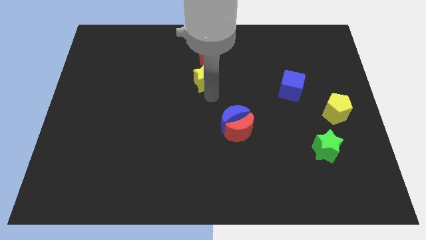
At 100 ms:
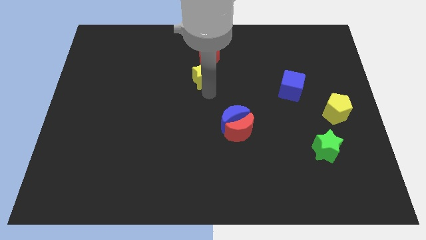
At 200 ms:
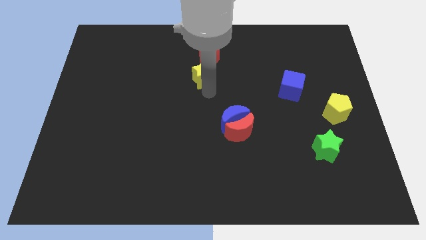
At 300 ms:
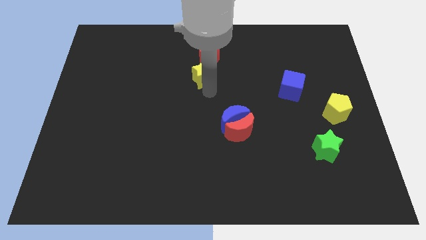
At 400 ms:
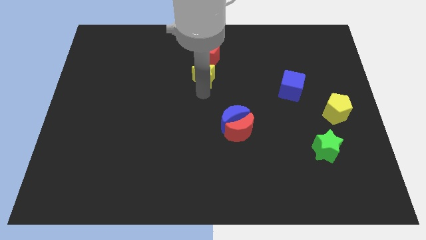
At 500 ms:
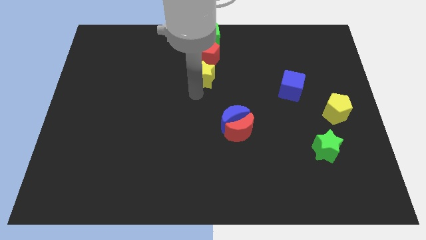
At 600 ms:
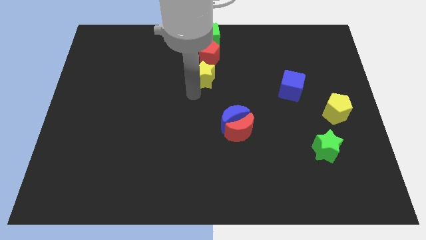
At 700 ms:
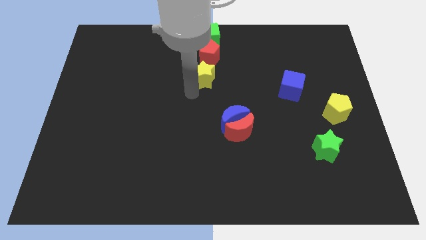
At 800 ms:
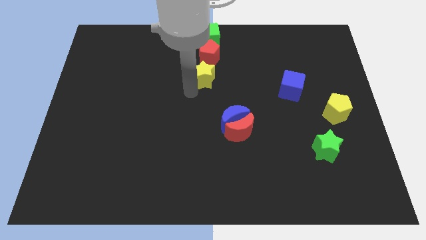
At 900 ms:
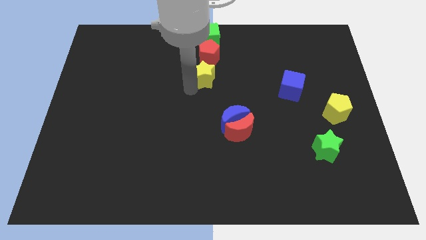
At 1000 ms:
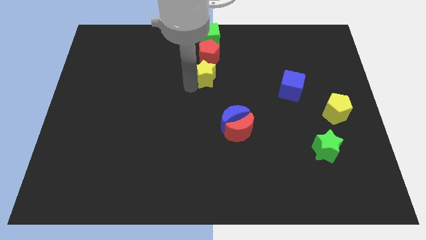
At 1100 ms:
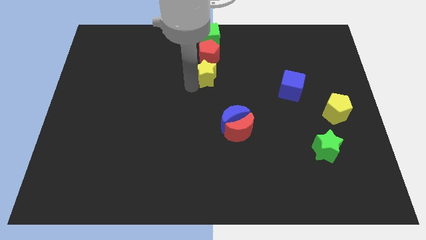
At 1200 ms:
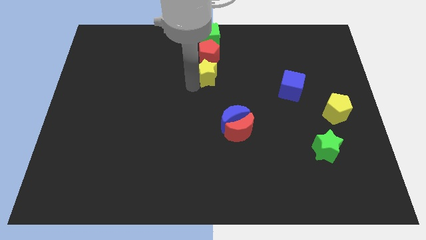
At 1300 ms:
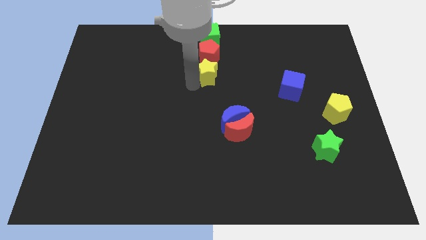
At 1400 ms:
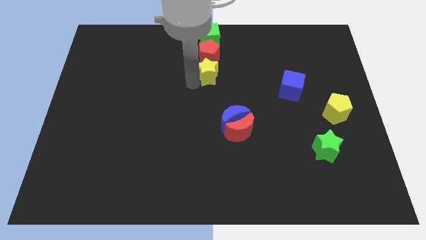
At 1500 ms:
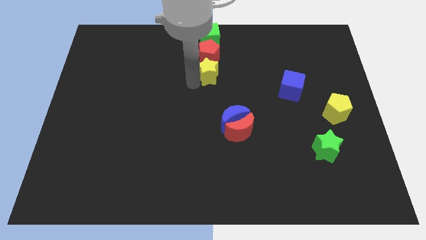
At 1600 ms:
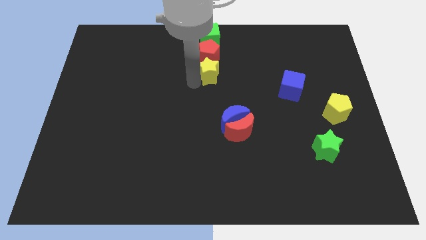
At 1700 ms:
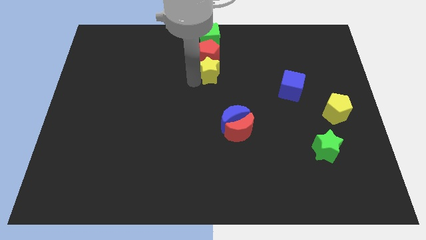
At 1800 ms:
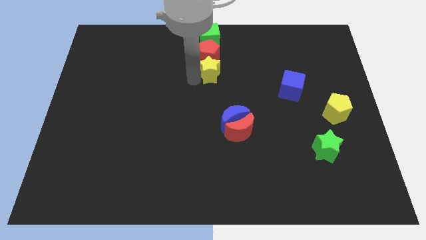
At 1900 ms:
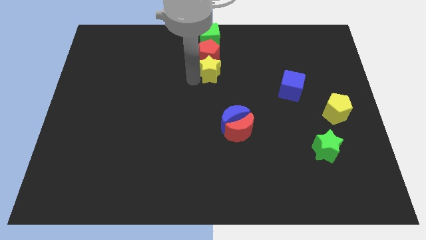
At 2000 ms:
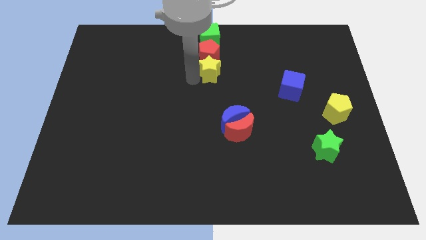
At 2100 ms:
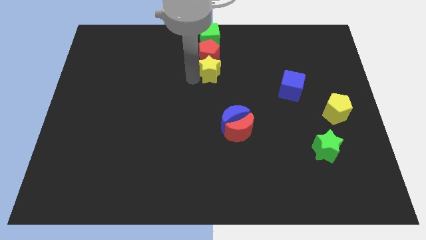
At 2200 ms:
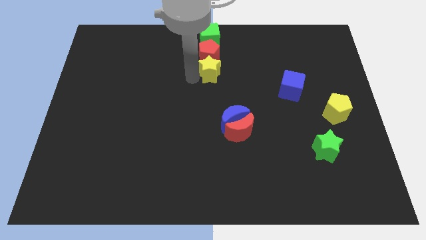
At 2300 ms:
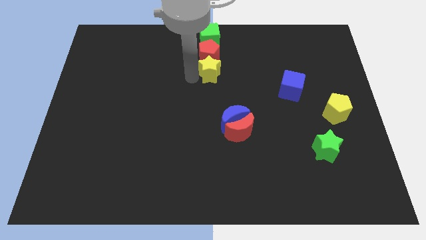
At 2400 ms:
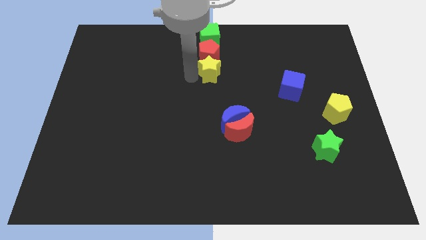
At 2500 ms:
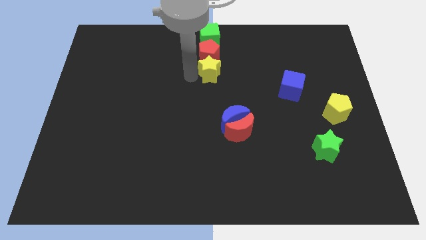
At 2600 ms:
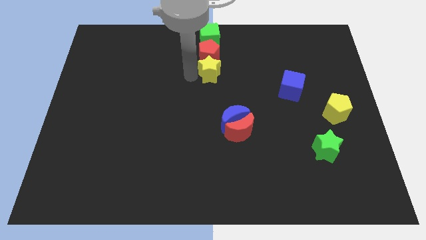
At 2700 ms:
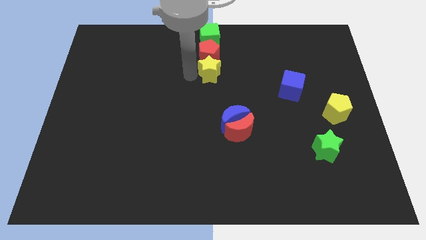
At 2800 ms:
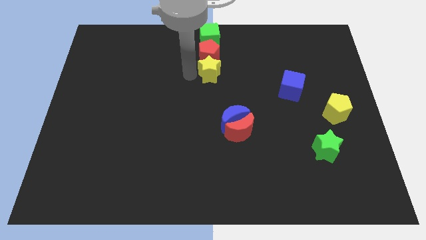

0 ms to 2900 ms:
move the yellow star to the bottom side of the red pentagon

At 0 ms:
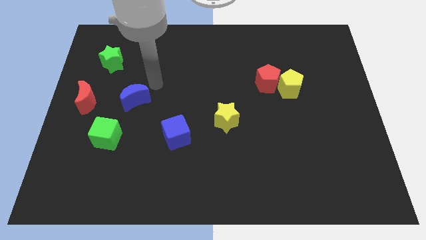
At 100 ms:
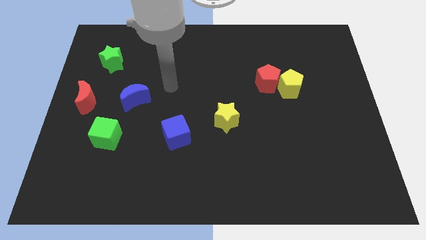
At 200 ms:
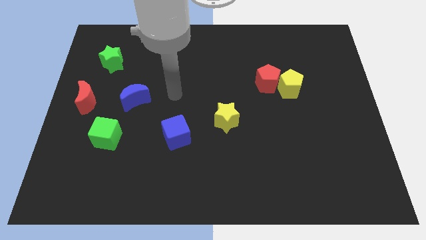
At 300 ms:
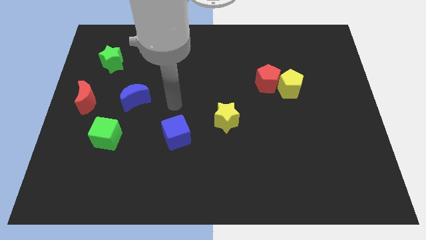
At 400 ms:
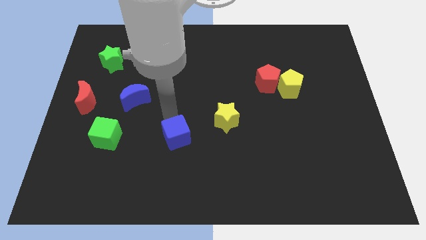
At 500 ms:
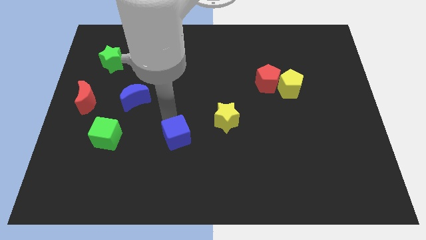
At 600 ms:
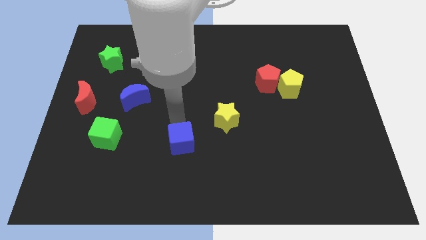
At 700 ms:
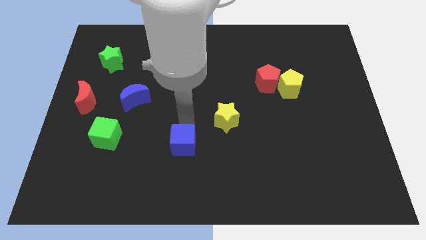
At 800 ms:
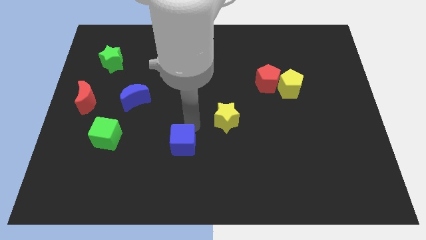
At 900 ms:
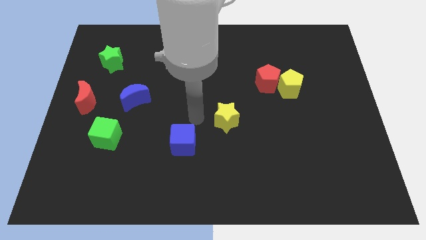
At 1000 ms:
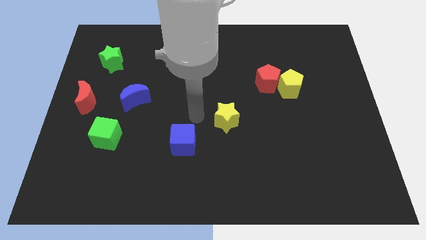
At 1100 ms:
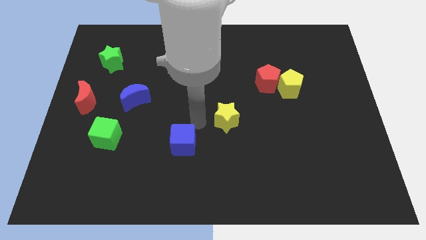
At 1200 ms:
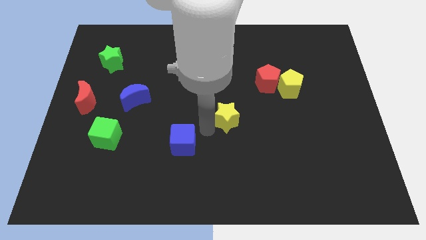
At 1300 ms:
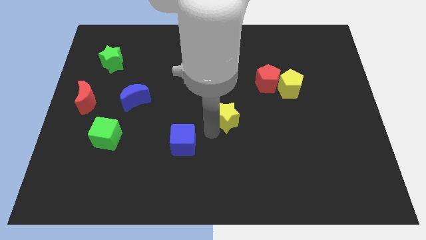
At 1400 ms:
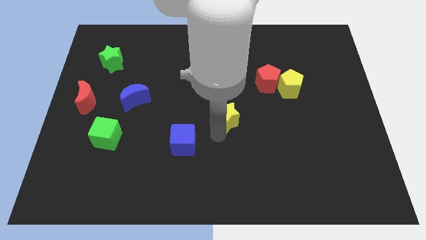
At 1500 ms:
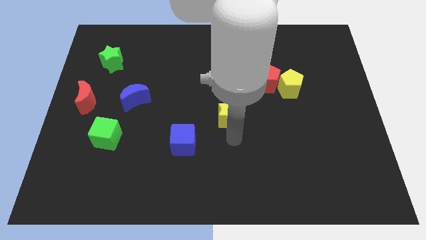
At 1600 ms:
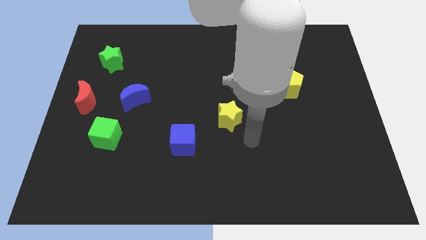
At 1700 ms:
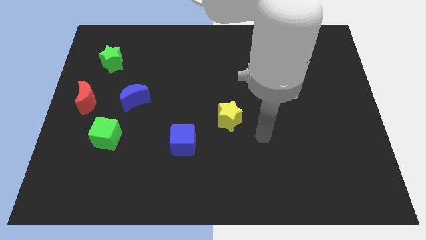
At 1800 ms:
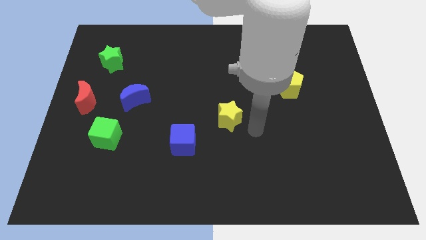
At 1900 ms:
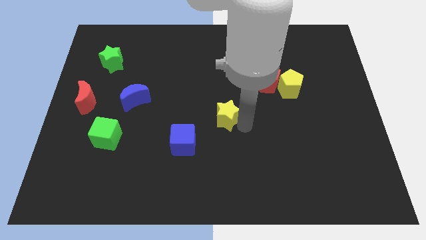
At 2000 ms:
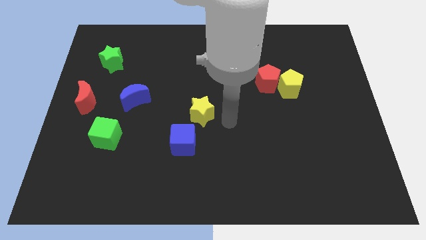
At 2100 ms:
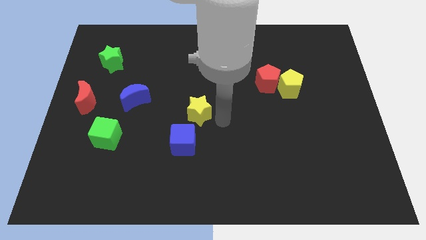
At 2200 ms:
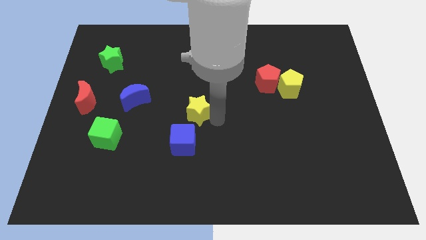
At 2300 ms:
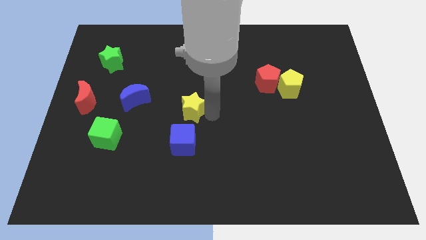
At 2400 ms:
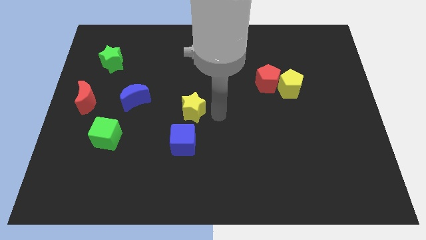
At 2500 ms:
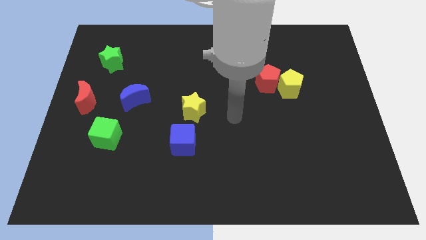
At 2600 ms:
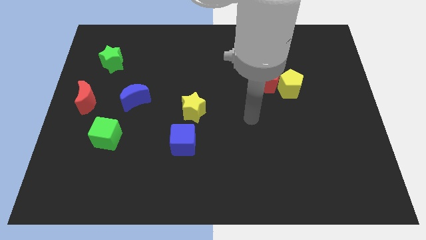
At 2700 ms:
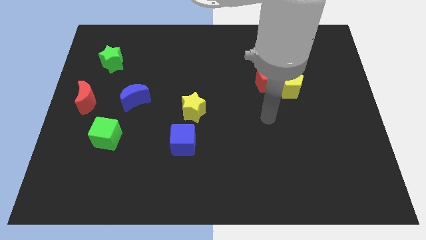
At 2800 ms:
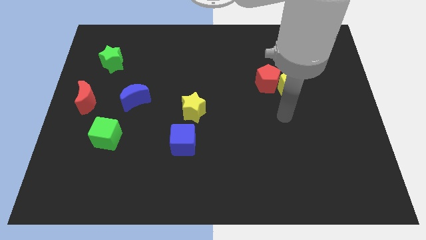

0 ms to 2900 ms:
move the blue cube and the yellow star towards the center of the board

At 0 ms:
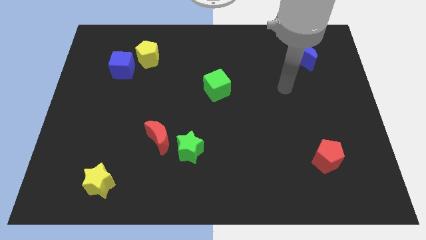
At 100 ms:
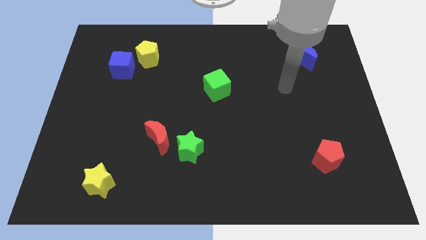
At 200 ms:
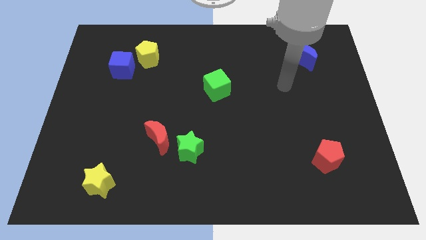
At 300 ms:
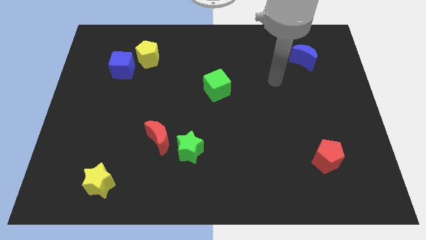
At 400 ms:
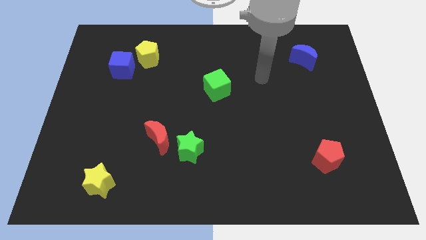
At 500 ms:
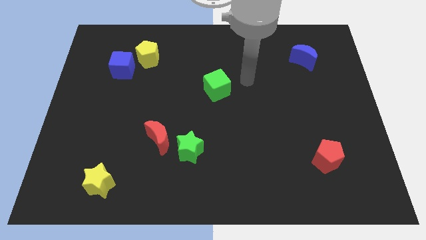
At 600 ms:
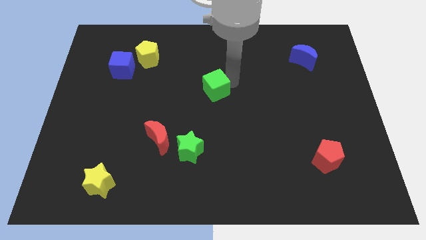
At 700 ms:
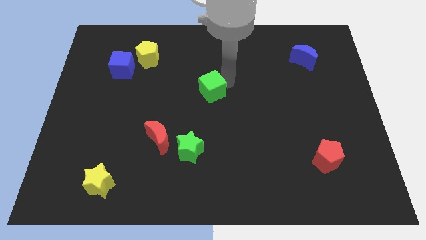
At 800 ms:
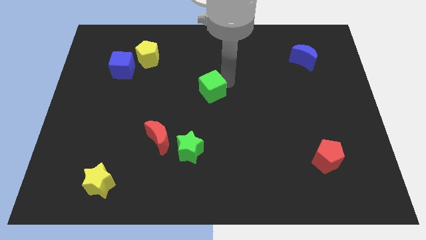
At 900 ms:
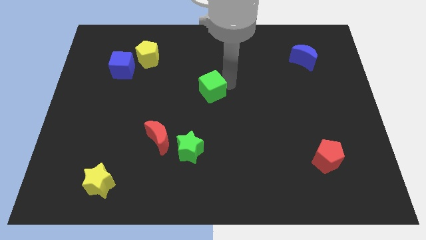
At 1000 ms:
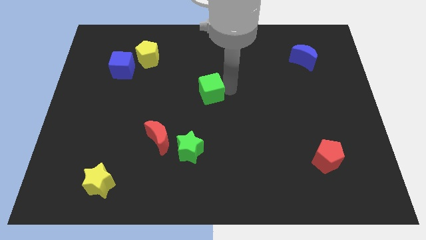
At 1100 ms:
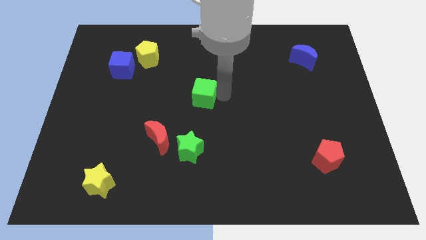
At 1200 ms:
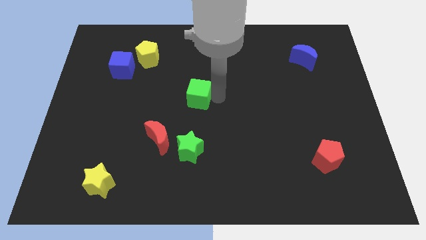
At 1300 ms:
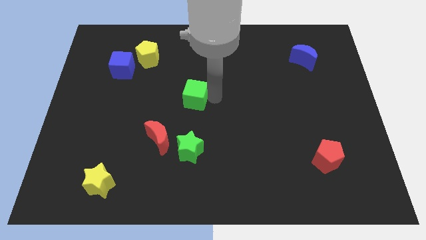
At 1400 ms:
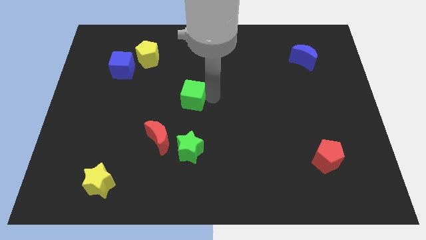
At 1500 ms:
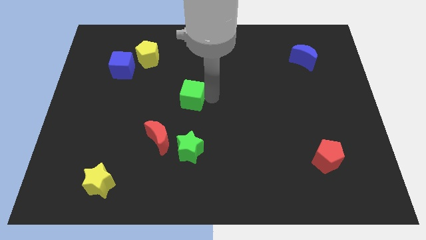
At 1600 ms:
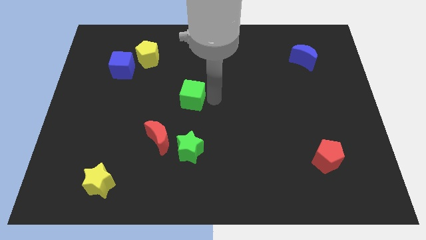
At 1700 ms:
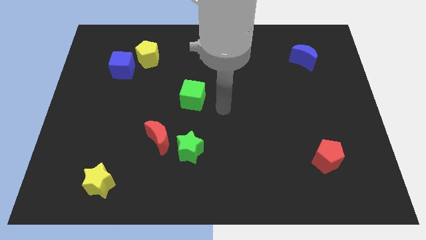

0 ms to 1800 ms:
push the green cube to the left side of the table

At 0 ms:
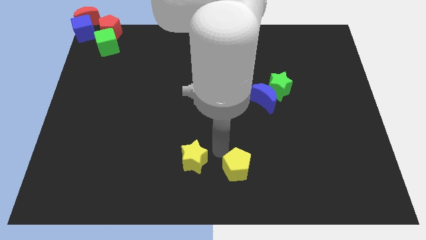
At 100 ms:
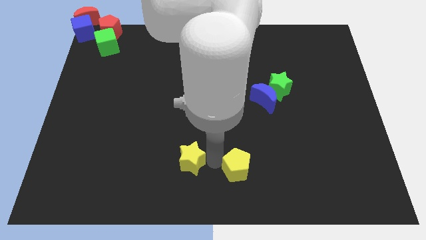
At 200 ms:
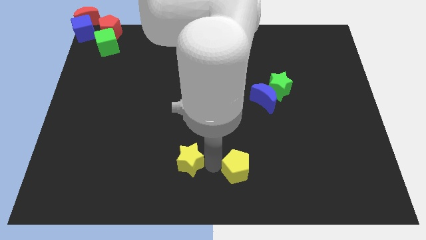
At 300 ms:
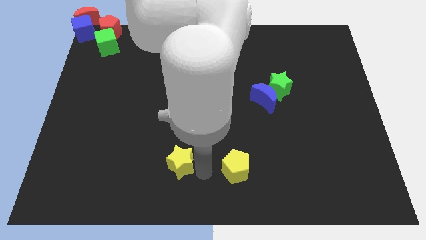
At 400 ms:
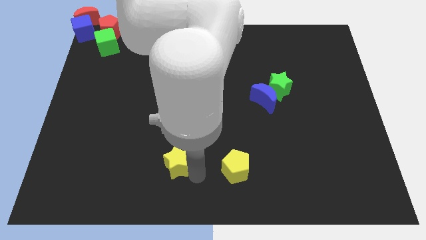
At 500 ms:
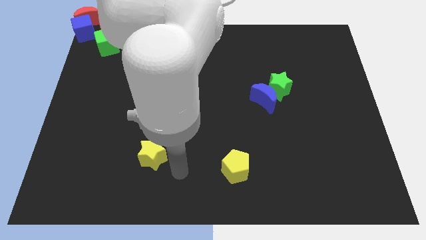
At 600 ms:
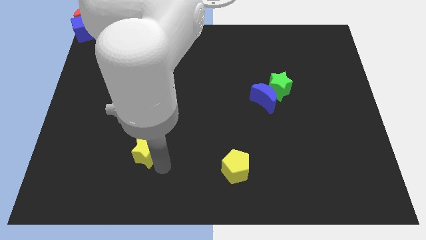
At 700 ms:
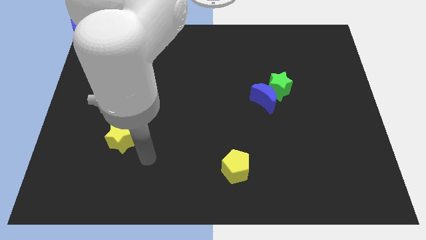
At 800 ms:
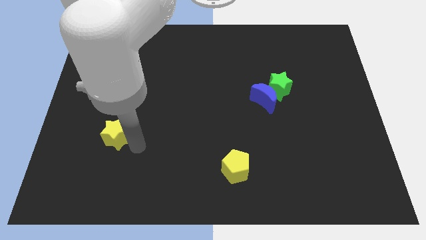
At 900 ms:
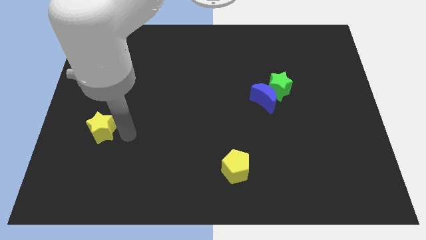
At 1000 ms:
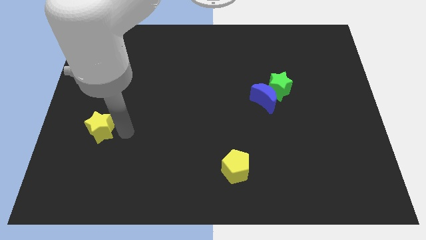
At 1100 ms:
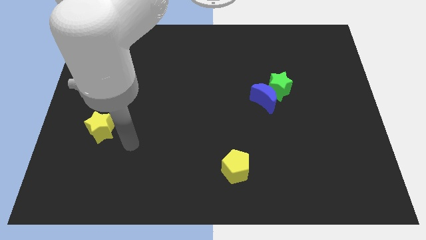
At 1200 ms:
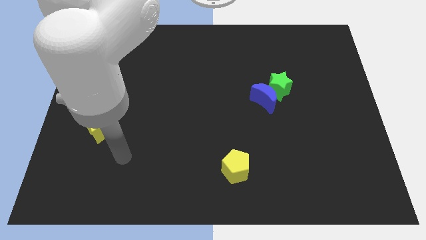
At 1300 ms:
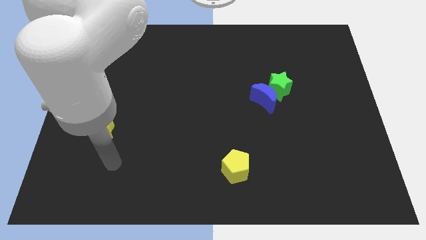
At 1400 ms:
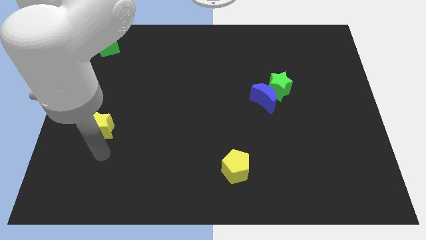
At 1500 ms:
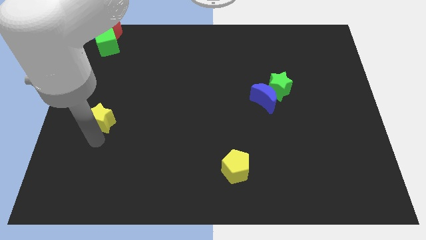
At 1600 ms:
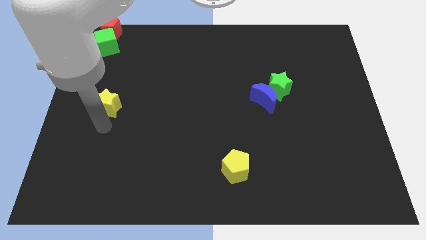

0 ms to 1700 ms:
place the yellow star to the left center
